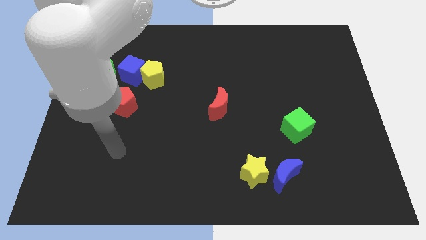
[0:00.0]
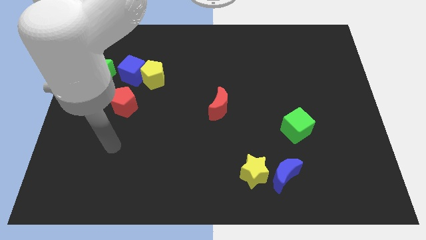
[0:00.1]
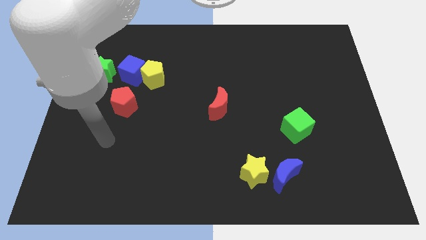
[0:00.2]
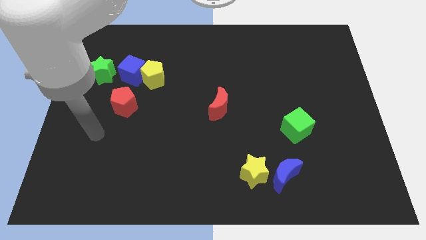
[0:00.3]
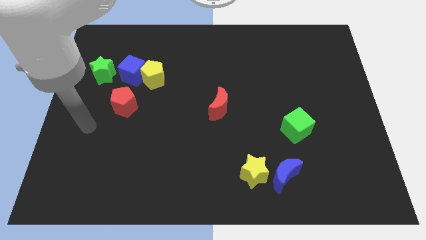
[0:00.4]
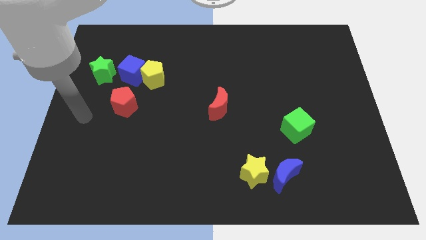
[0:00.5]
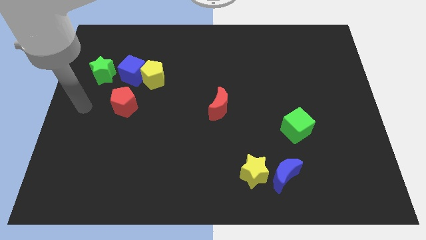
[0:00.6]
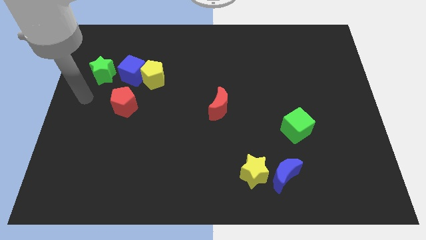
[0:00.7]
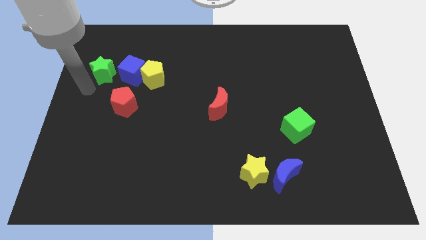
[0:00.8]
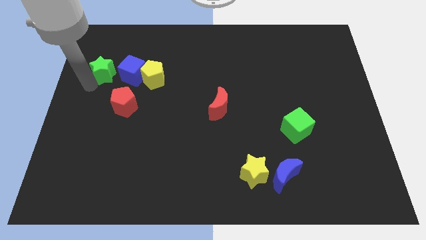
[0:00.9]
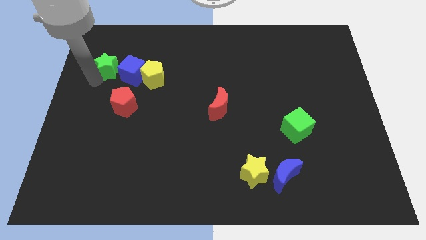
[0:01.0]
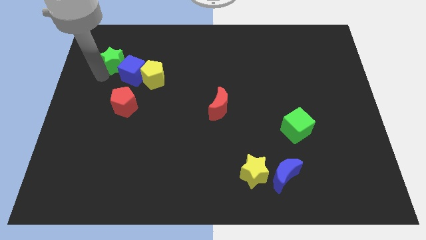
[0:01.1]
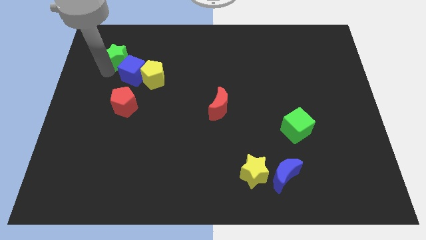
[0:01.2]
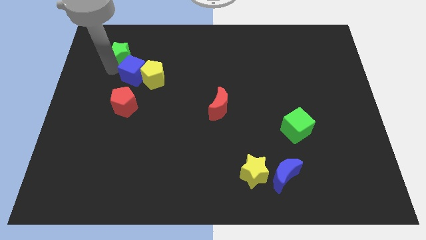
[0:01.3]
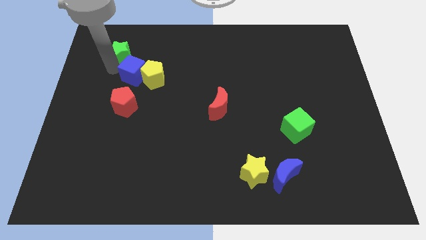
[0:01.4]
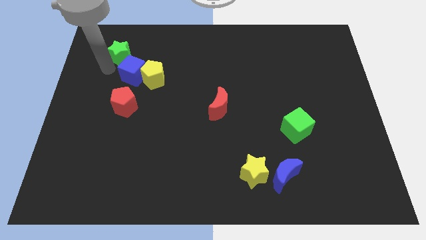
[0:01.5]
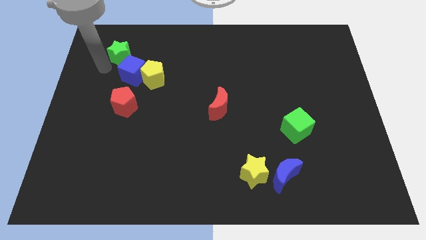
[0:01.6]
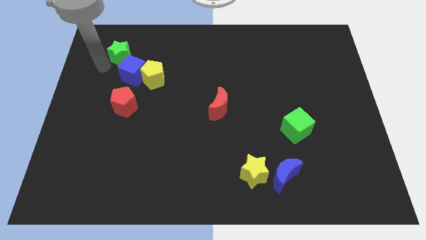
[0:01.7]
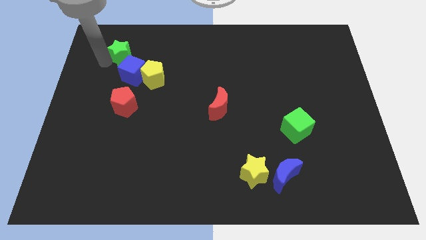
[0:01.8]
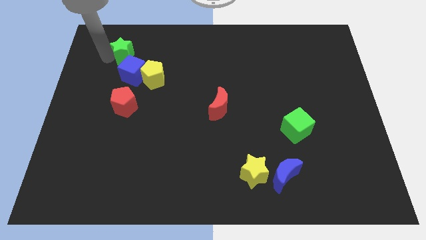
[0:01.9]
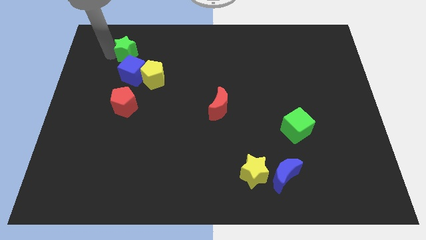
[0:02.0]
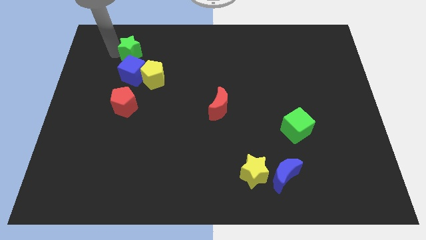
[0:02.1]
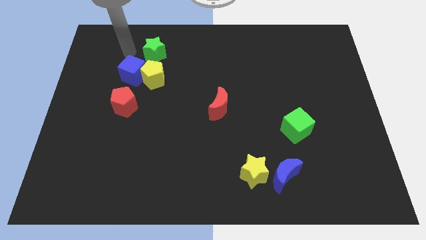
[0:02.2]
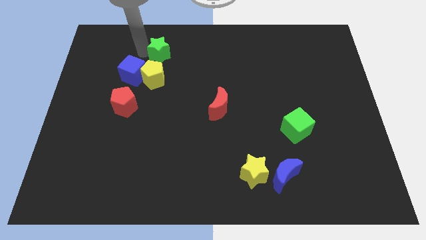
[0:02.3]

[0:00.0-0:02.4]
push the green star to the top side of the yellow pentagon

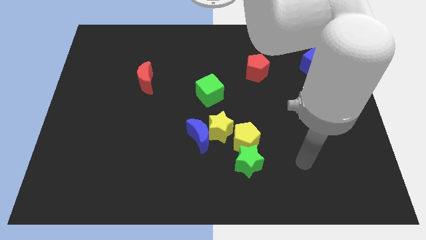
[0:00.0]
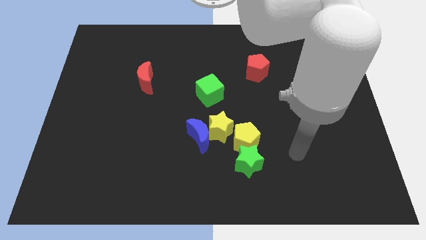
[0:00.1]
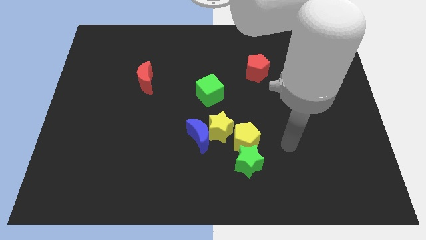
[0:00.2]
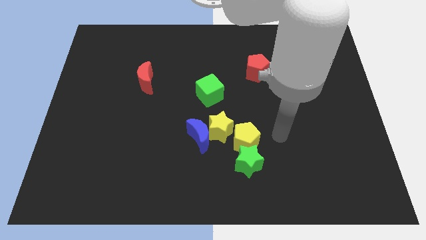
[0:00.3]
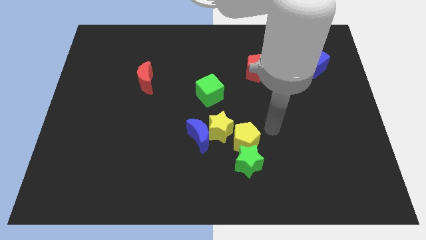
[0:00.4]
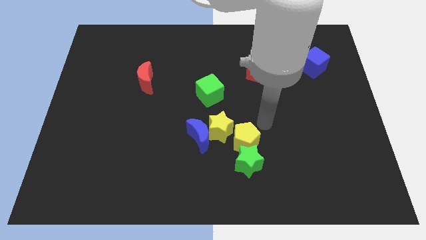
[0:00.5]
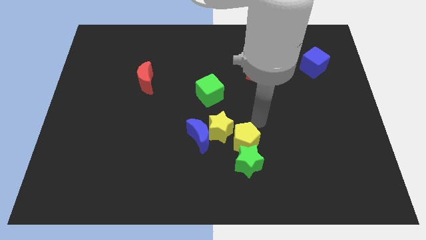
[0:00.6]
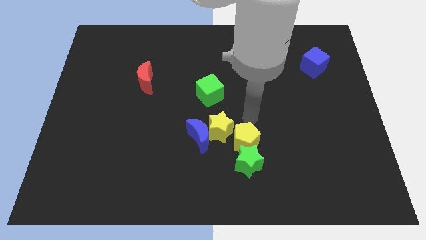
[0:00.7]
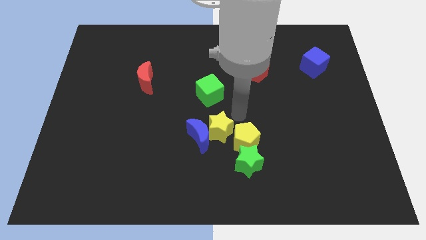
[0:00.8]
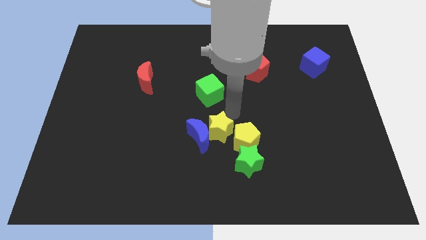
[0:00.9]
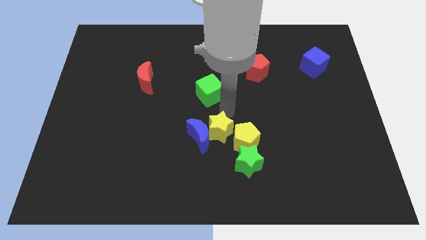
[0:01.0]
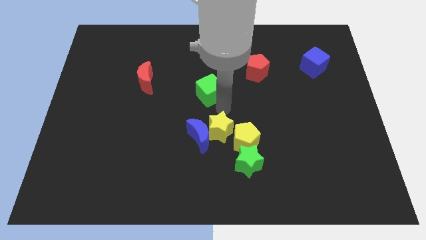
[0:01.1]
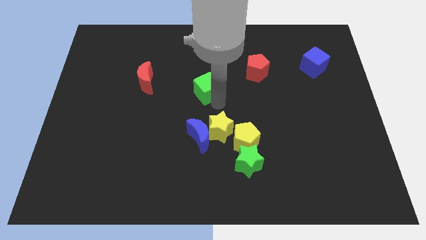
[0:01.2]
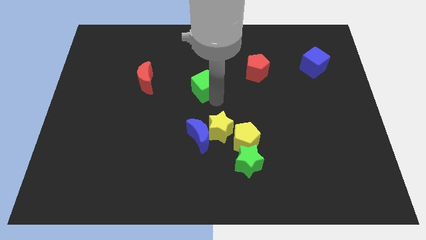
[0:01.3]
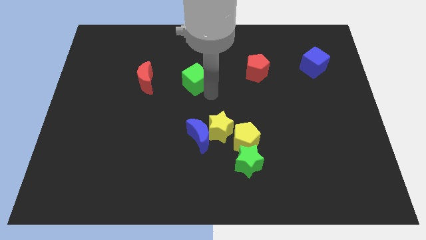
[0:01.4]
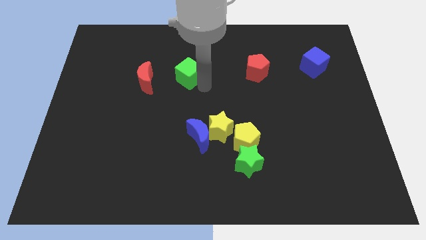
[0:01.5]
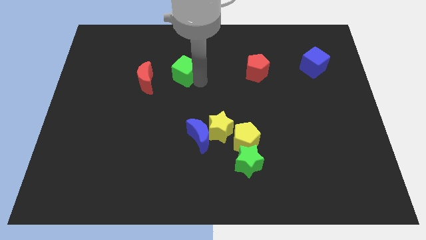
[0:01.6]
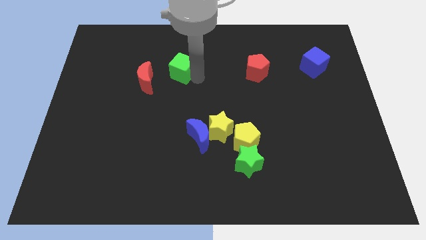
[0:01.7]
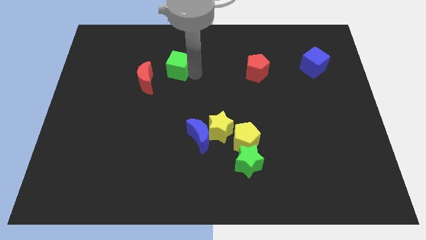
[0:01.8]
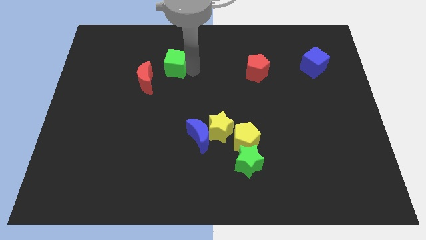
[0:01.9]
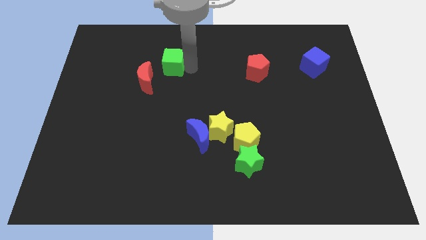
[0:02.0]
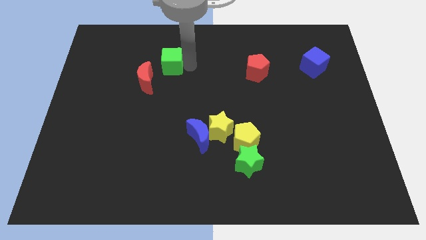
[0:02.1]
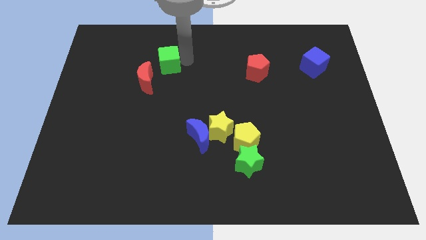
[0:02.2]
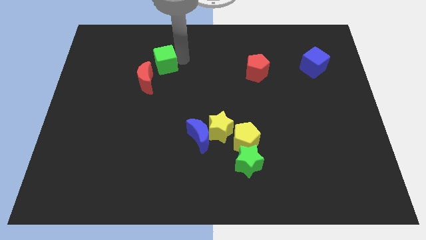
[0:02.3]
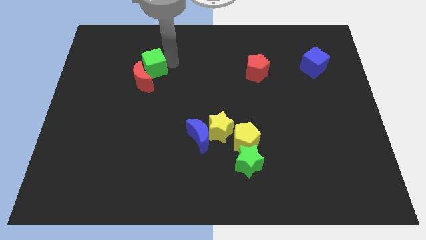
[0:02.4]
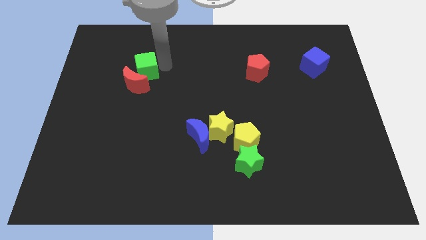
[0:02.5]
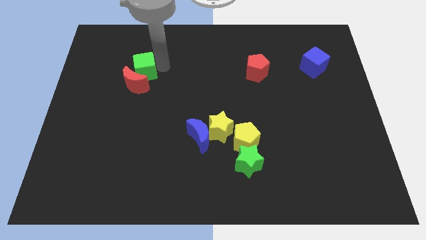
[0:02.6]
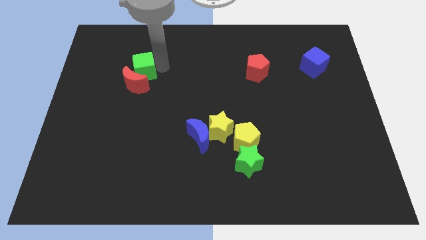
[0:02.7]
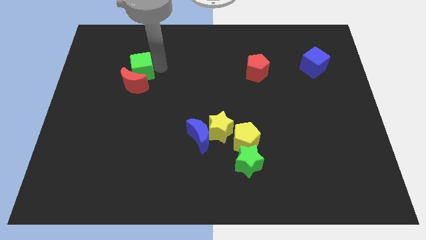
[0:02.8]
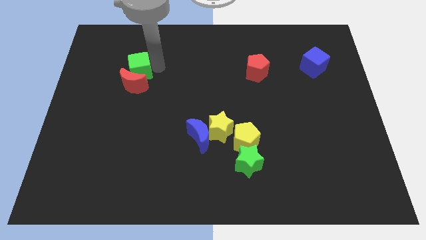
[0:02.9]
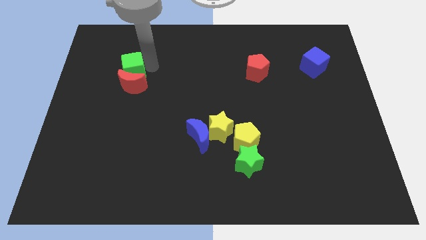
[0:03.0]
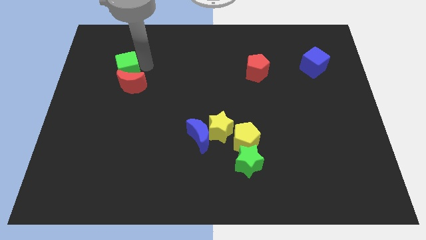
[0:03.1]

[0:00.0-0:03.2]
move the green cube to the top of the red crescent

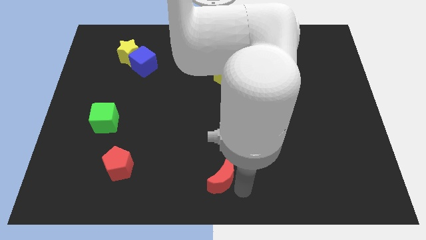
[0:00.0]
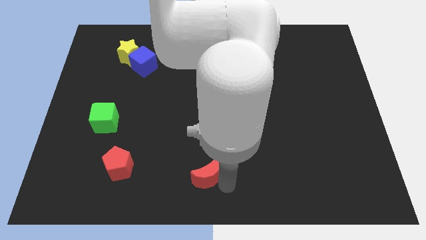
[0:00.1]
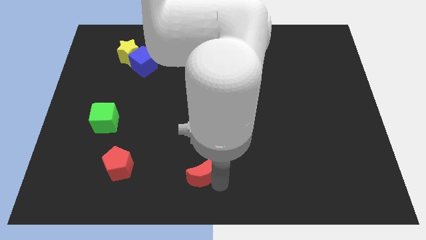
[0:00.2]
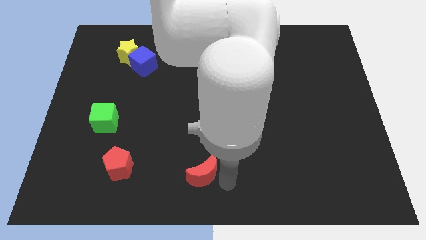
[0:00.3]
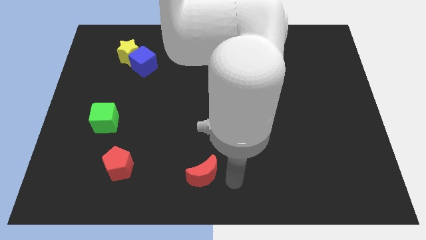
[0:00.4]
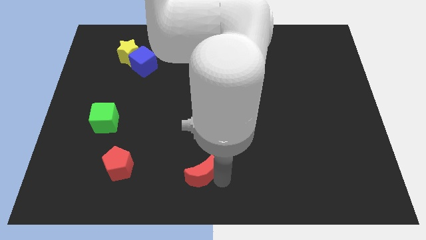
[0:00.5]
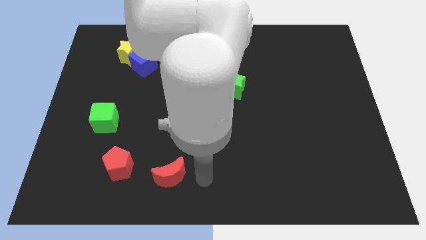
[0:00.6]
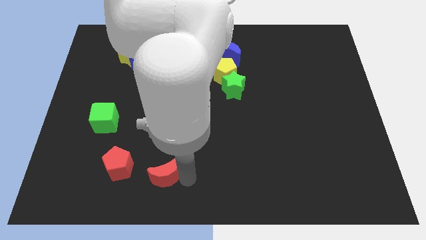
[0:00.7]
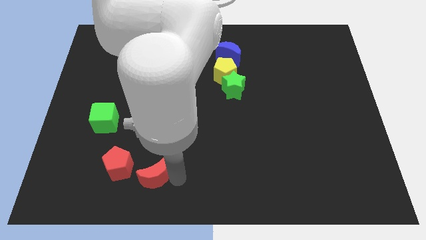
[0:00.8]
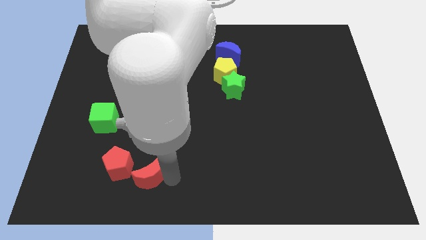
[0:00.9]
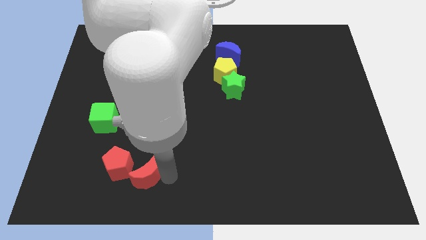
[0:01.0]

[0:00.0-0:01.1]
push the red moon towards the red pentagon

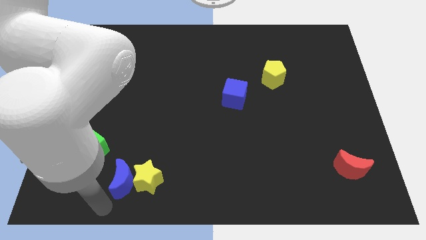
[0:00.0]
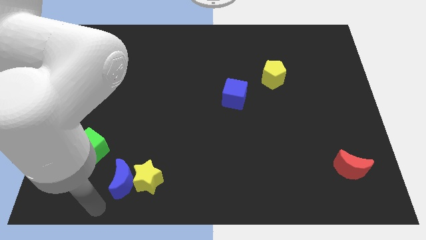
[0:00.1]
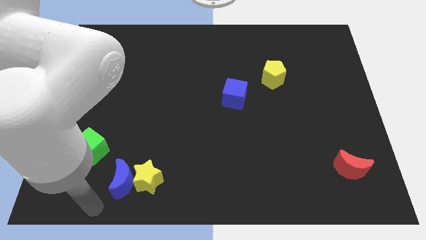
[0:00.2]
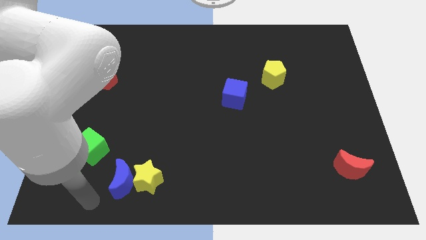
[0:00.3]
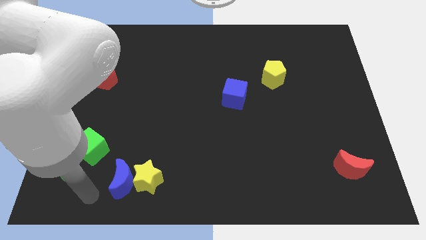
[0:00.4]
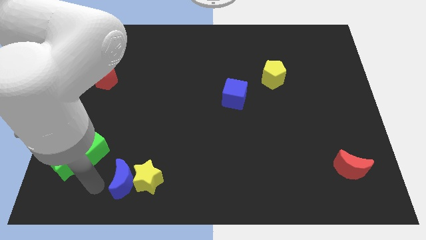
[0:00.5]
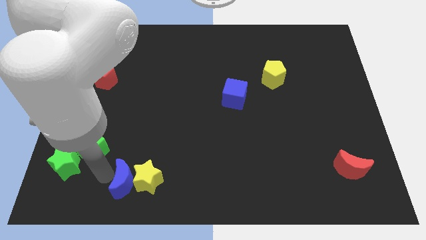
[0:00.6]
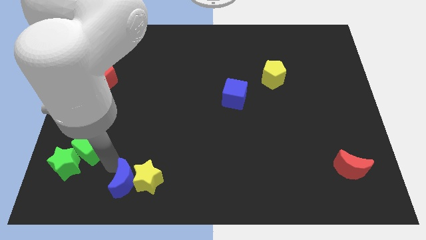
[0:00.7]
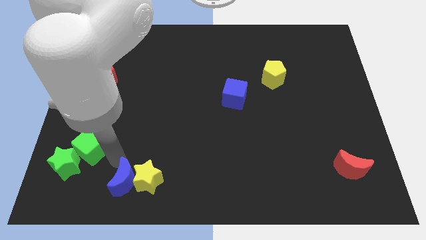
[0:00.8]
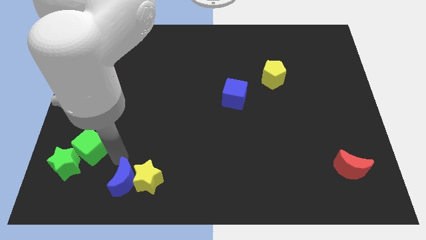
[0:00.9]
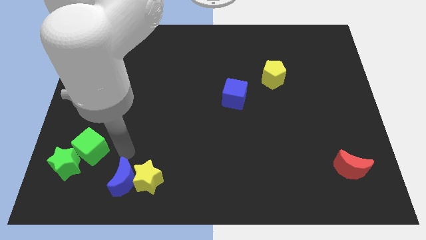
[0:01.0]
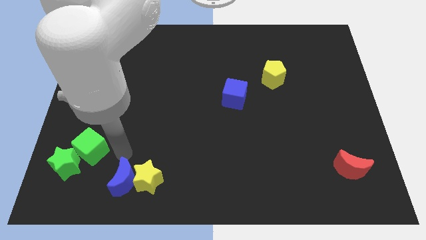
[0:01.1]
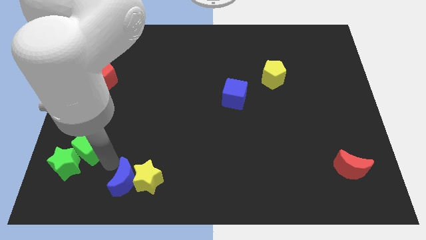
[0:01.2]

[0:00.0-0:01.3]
tap at the top side of the blue crescent

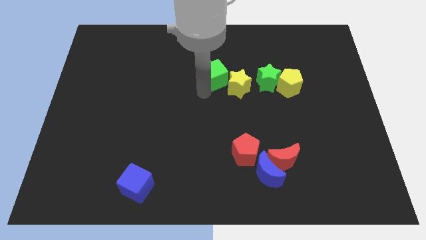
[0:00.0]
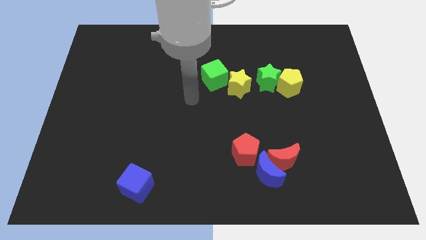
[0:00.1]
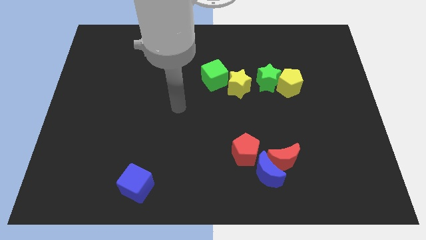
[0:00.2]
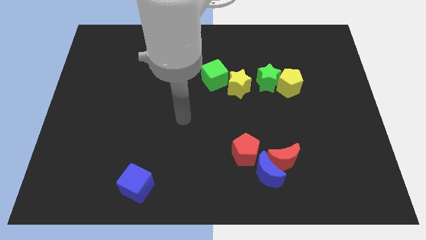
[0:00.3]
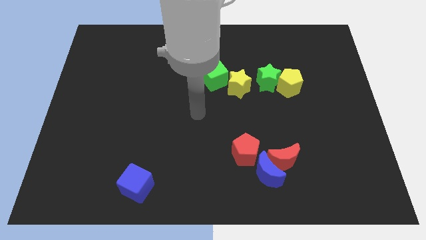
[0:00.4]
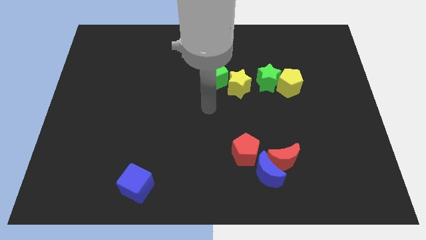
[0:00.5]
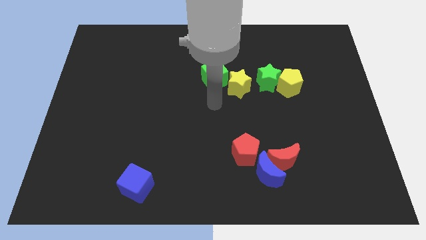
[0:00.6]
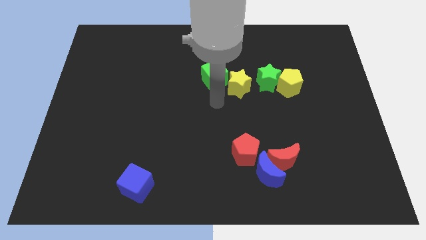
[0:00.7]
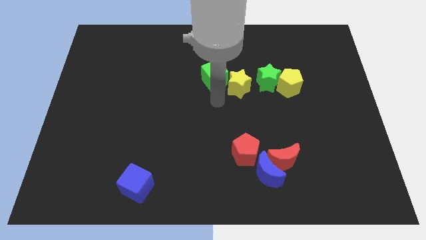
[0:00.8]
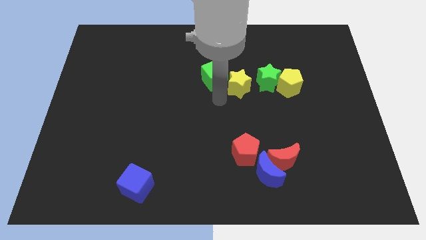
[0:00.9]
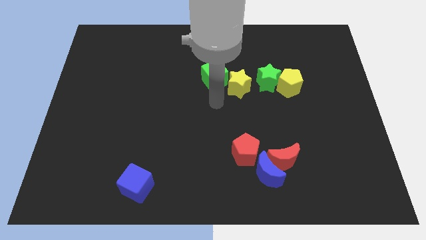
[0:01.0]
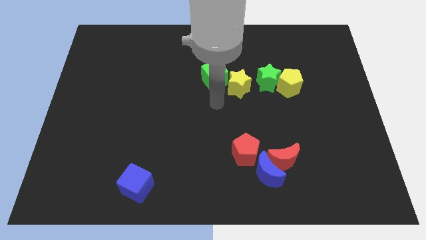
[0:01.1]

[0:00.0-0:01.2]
point your arm at the bottom side of the green cube
